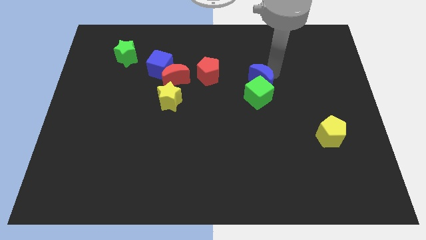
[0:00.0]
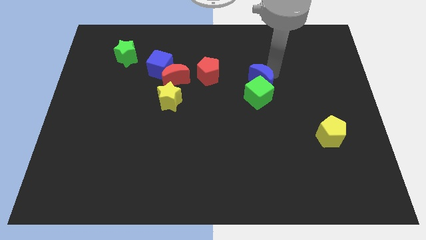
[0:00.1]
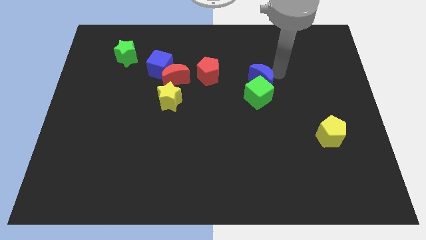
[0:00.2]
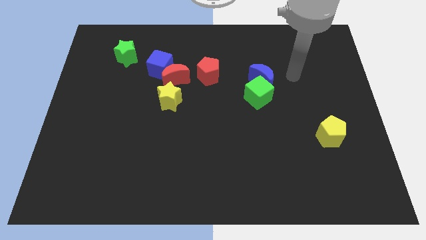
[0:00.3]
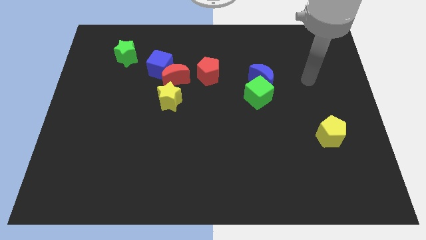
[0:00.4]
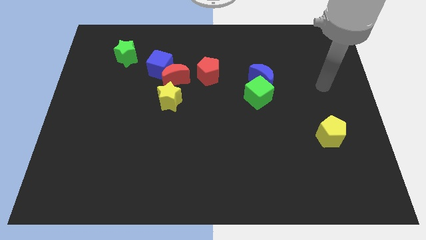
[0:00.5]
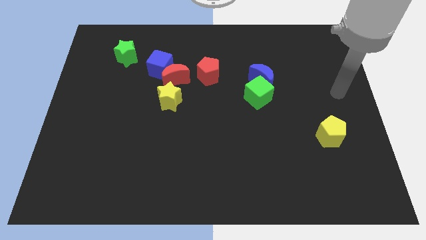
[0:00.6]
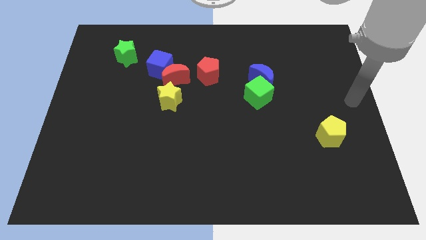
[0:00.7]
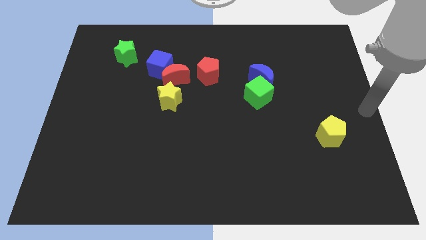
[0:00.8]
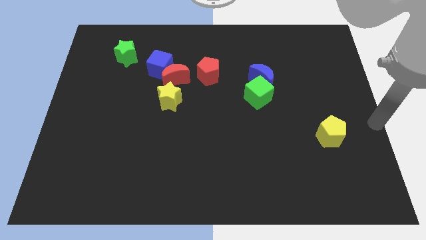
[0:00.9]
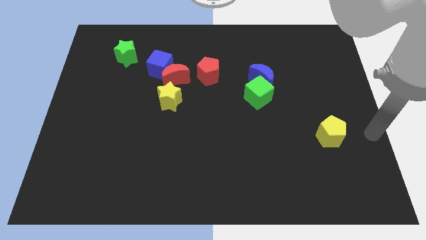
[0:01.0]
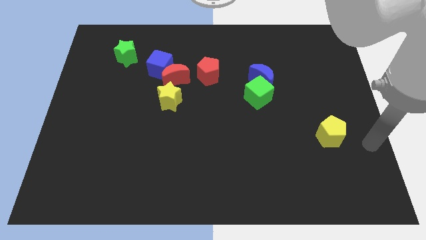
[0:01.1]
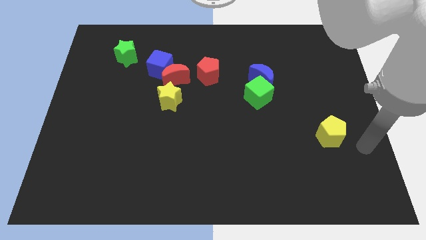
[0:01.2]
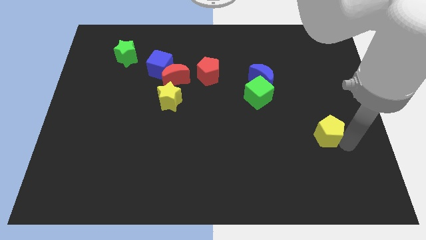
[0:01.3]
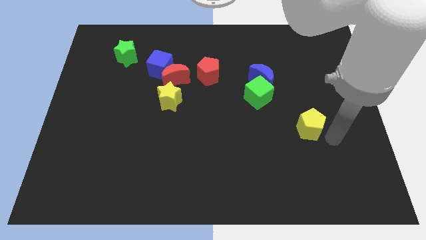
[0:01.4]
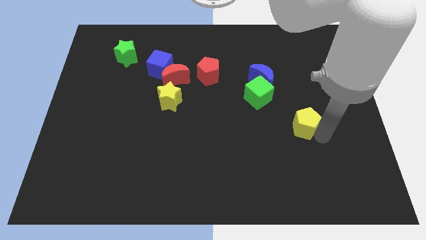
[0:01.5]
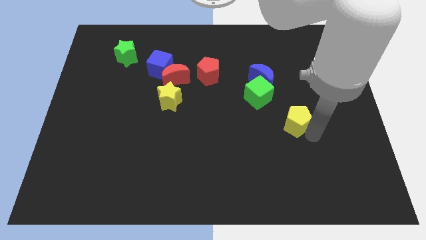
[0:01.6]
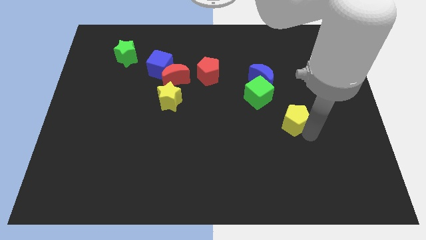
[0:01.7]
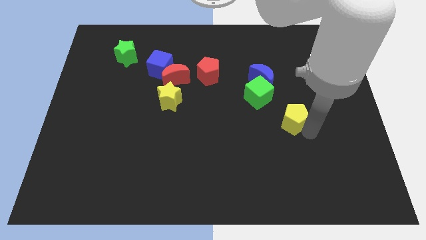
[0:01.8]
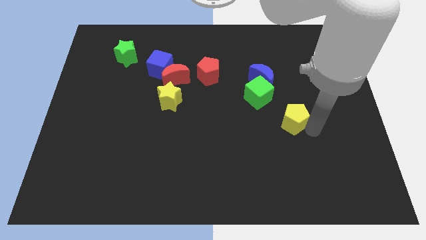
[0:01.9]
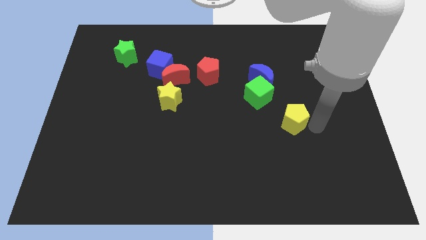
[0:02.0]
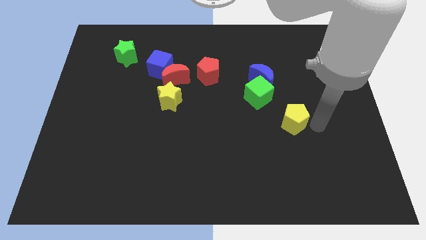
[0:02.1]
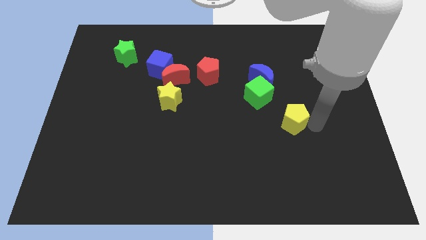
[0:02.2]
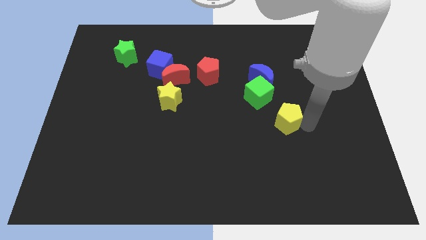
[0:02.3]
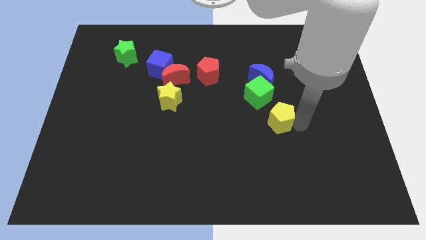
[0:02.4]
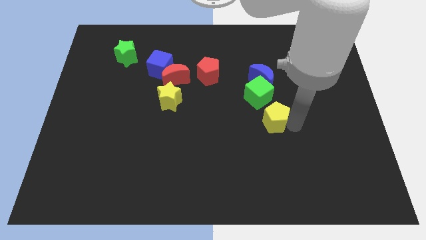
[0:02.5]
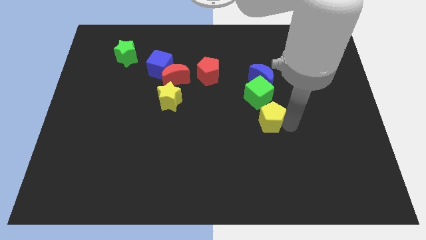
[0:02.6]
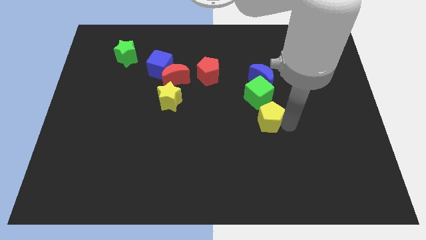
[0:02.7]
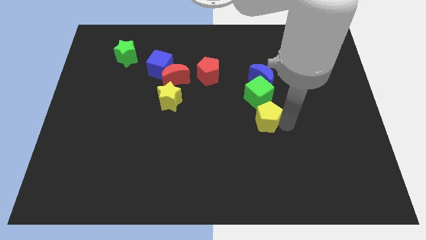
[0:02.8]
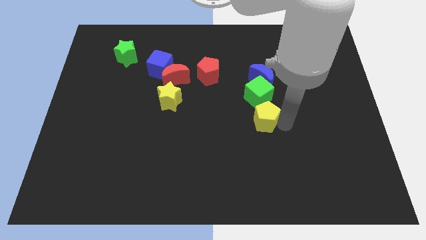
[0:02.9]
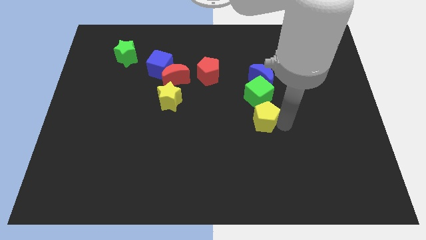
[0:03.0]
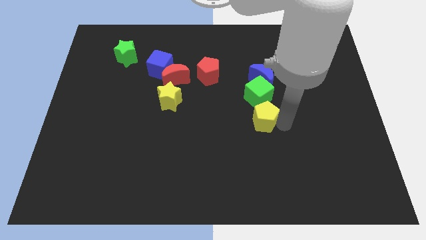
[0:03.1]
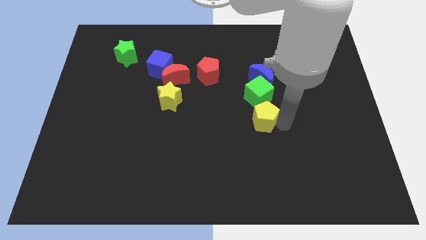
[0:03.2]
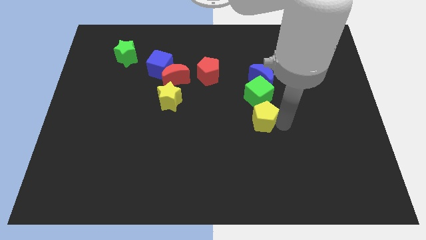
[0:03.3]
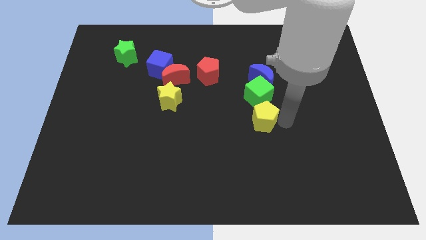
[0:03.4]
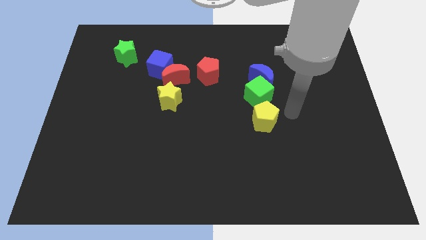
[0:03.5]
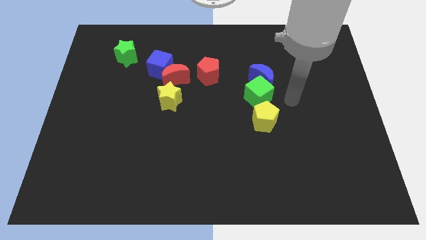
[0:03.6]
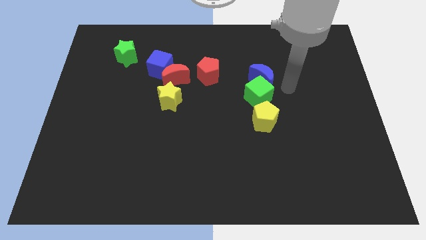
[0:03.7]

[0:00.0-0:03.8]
place the yellow pentagon at the bottom side of the green cube

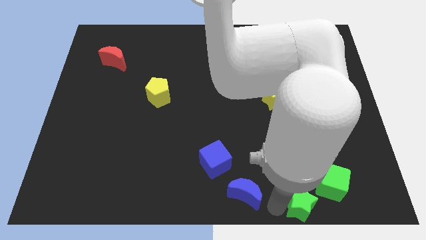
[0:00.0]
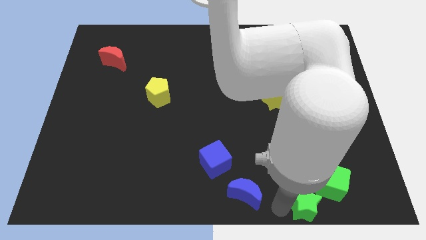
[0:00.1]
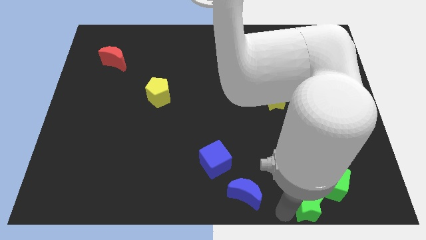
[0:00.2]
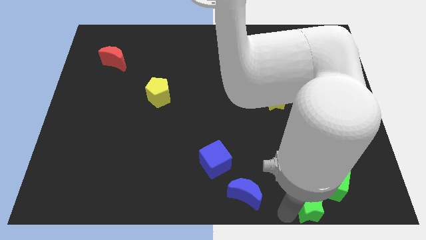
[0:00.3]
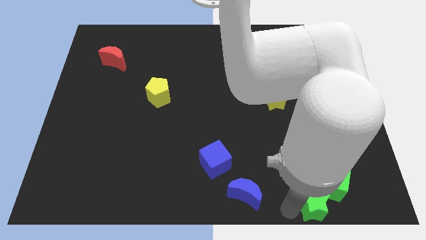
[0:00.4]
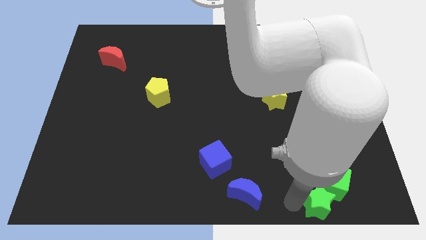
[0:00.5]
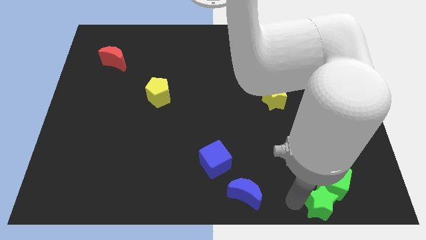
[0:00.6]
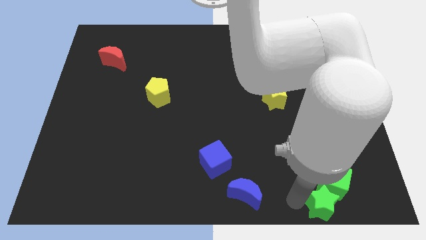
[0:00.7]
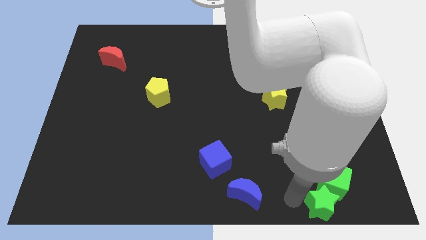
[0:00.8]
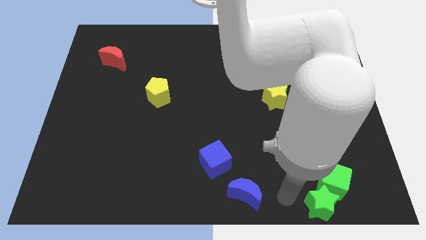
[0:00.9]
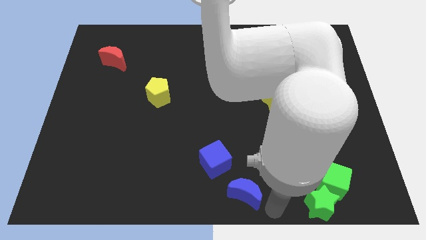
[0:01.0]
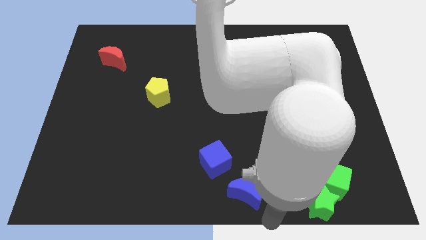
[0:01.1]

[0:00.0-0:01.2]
move the green star below the green cube

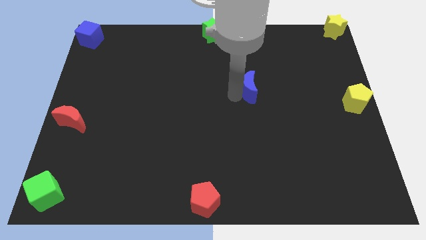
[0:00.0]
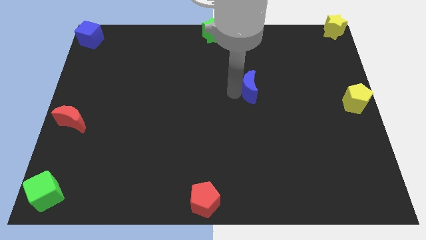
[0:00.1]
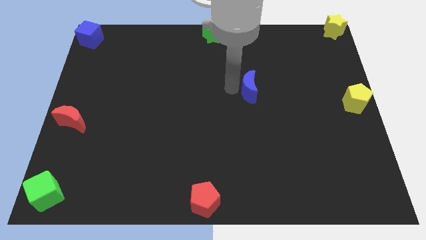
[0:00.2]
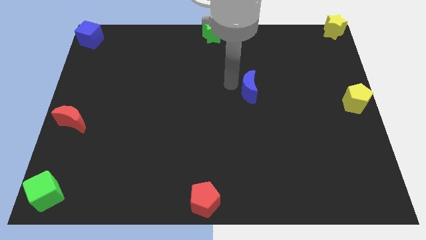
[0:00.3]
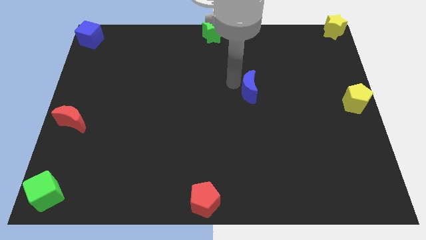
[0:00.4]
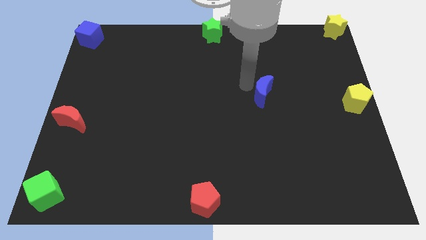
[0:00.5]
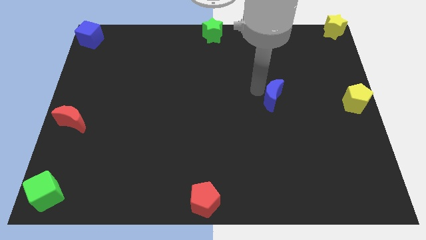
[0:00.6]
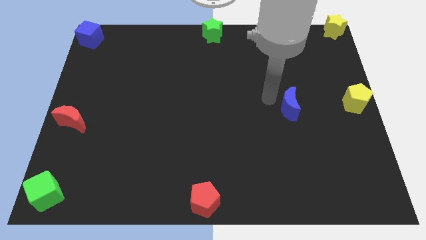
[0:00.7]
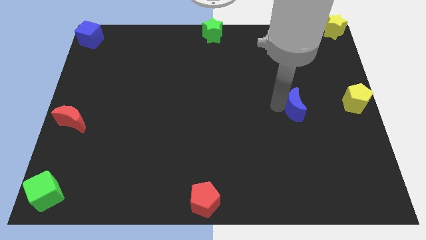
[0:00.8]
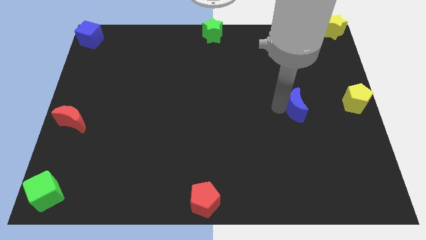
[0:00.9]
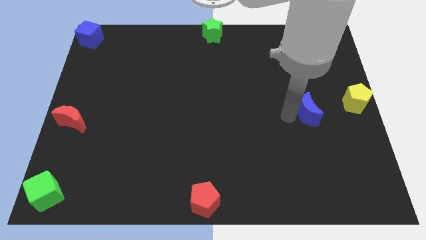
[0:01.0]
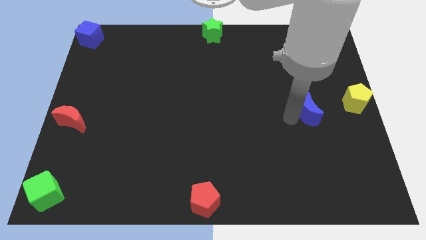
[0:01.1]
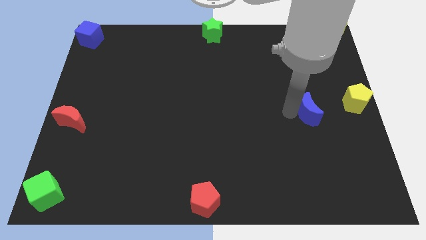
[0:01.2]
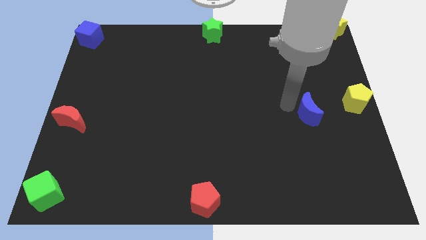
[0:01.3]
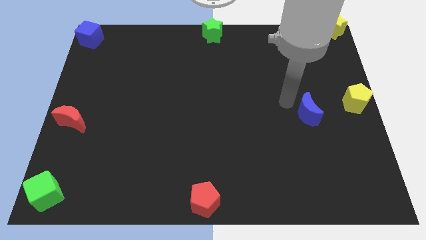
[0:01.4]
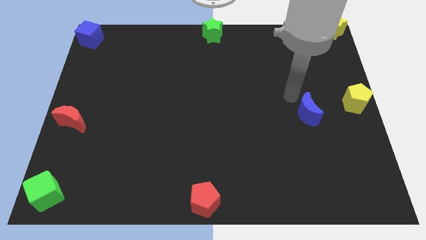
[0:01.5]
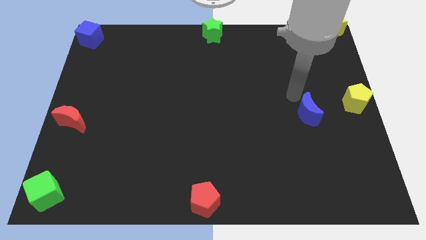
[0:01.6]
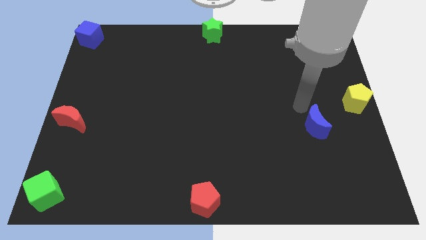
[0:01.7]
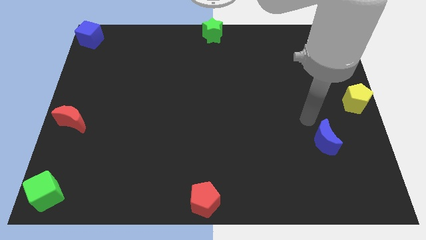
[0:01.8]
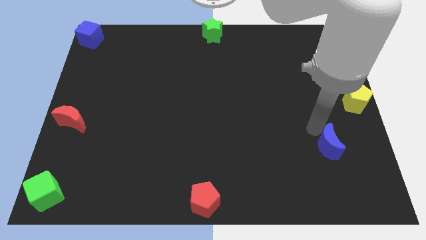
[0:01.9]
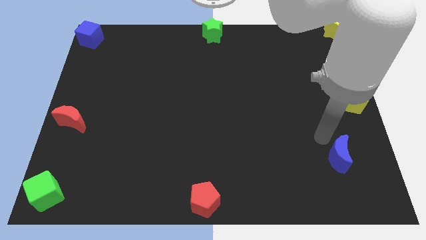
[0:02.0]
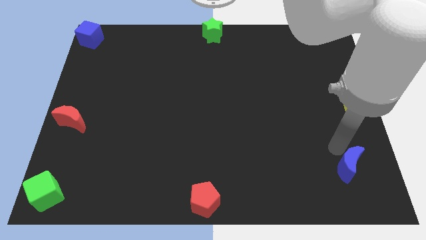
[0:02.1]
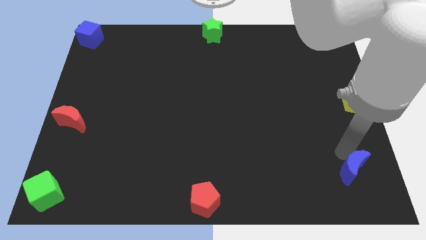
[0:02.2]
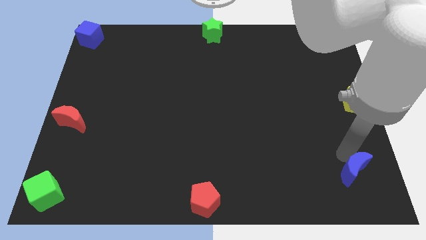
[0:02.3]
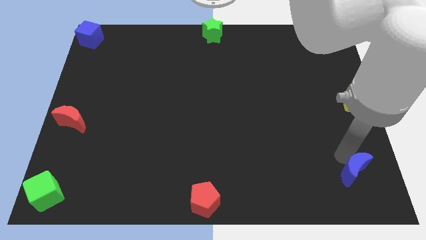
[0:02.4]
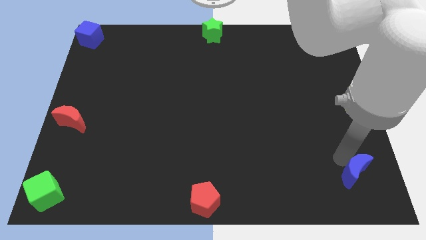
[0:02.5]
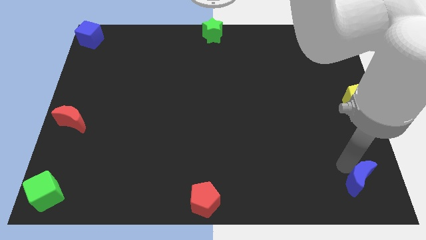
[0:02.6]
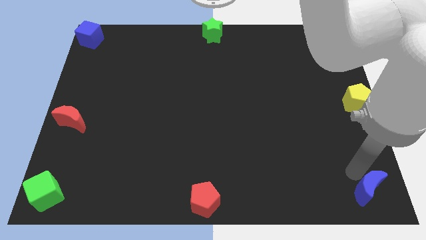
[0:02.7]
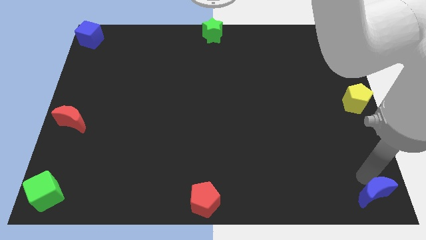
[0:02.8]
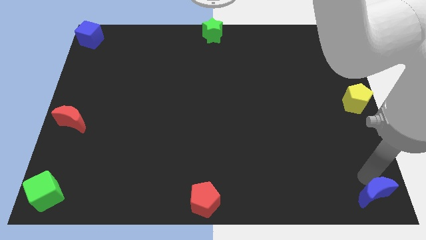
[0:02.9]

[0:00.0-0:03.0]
push the blue crescent to the bottom right to the board

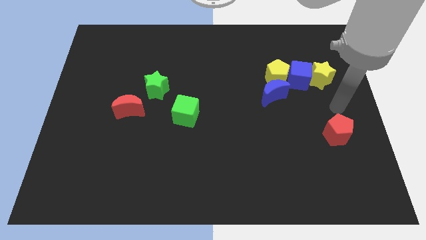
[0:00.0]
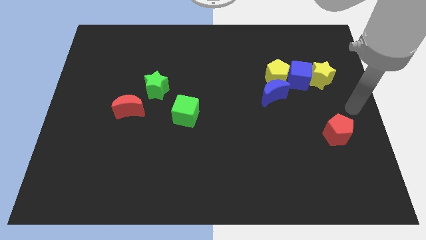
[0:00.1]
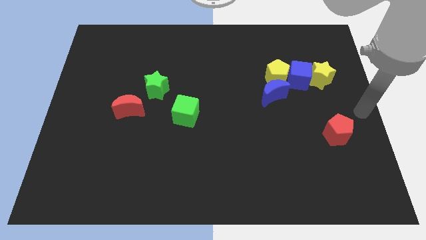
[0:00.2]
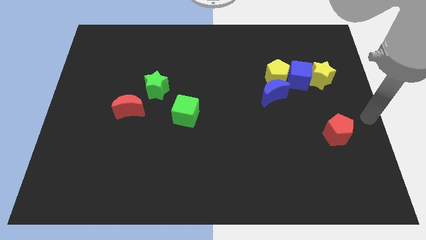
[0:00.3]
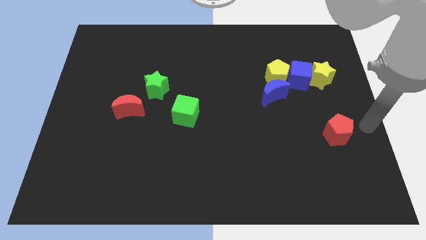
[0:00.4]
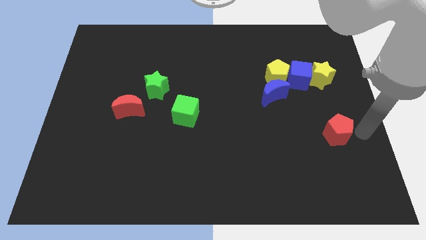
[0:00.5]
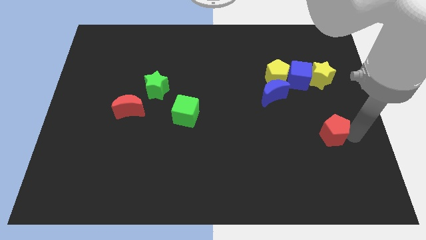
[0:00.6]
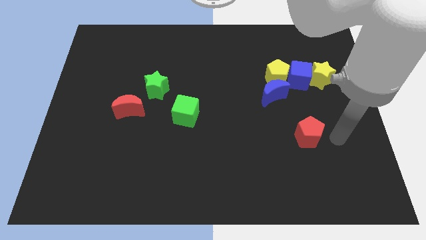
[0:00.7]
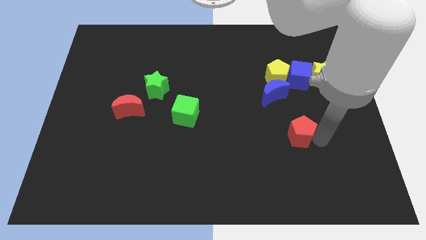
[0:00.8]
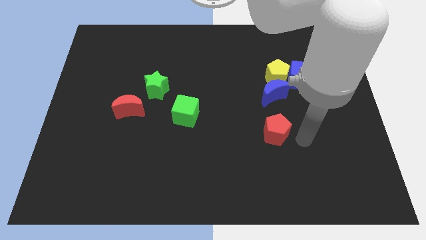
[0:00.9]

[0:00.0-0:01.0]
put the red pentagon below the blue crescent

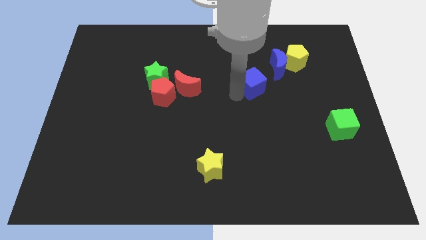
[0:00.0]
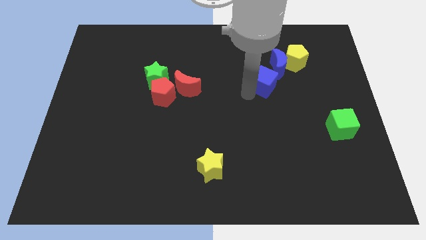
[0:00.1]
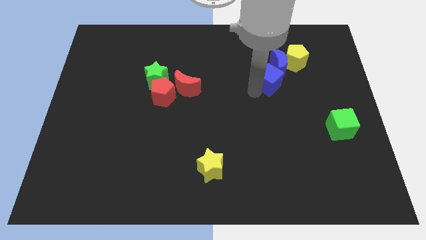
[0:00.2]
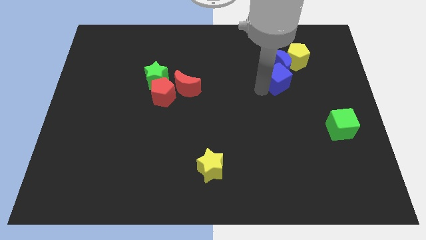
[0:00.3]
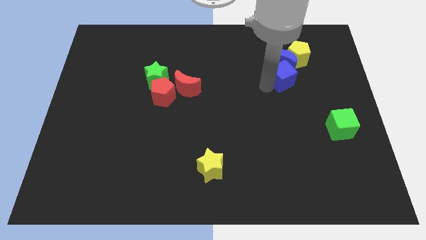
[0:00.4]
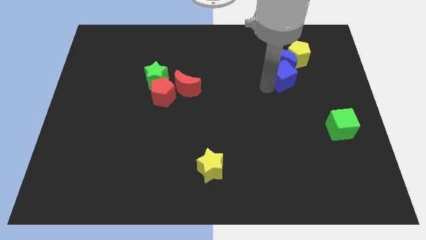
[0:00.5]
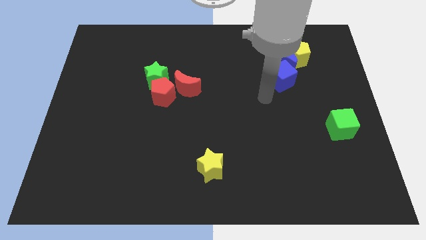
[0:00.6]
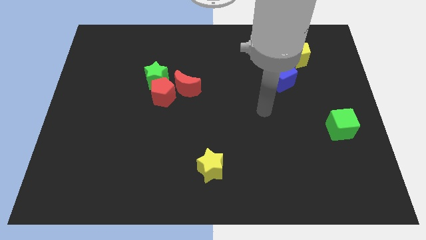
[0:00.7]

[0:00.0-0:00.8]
place the blue cube below the blue crescent
